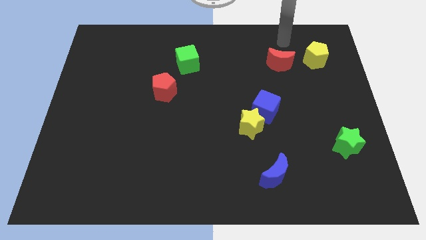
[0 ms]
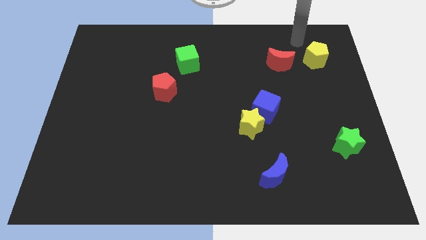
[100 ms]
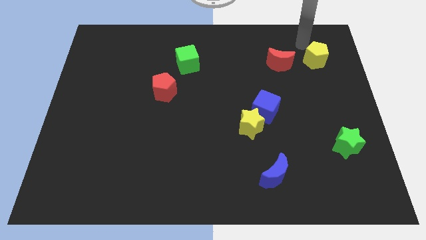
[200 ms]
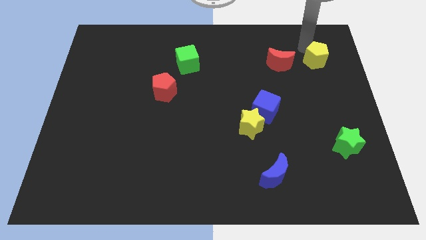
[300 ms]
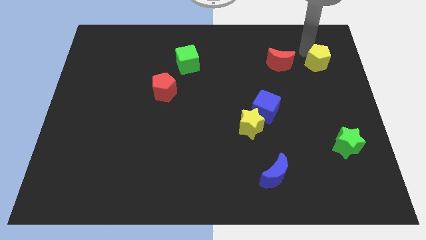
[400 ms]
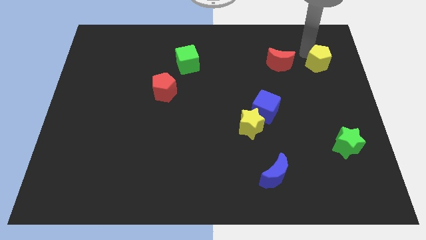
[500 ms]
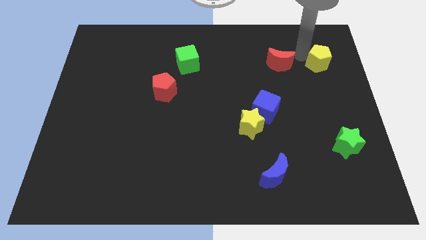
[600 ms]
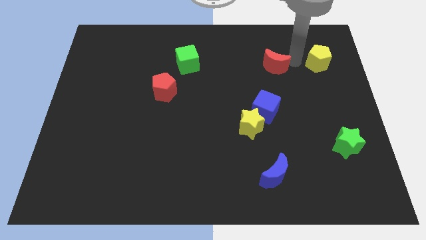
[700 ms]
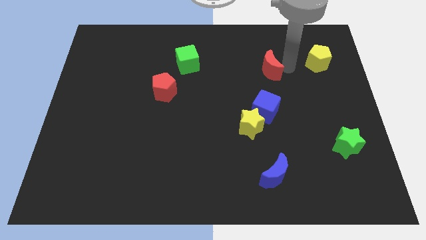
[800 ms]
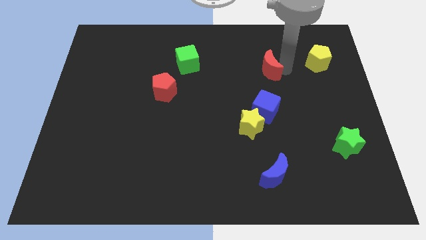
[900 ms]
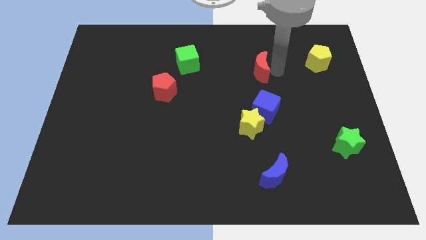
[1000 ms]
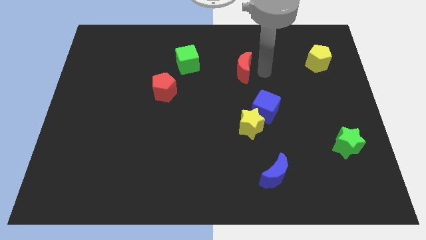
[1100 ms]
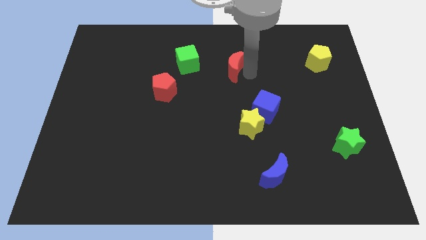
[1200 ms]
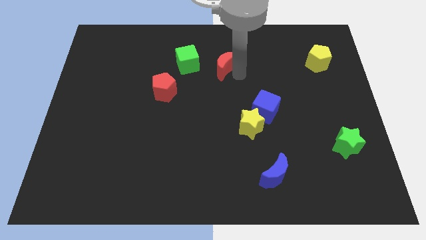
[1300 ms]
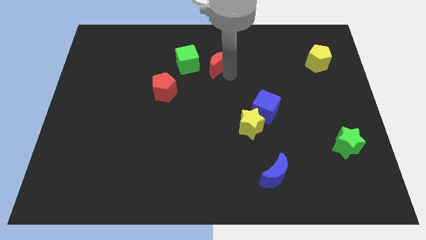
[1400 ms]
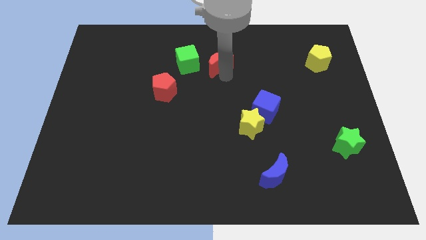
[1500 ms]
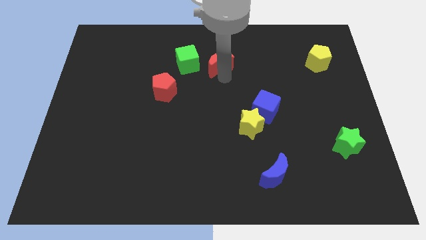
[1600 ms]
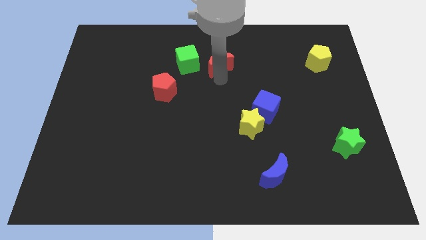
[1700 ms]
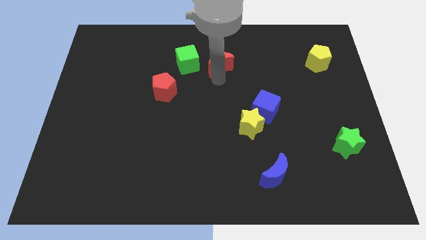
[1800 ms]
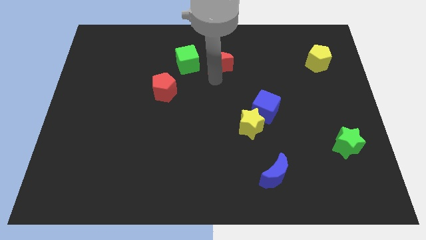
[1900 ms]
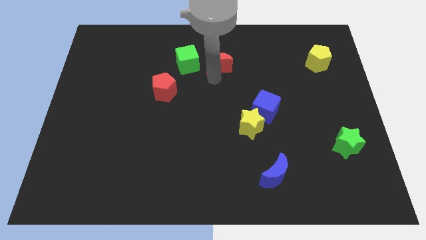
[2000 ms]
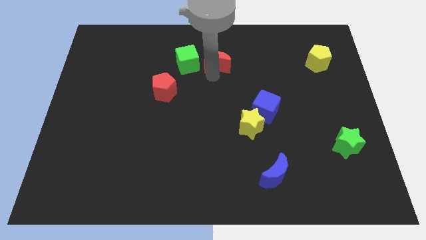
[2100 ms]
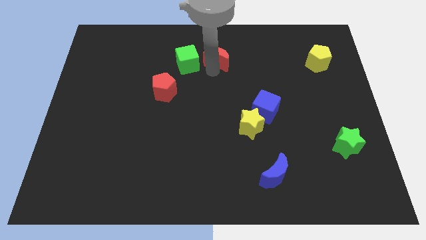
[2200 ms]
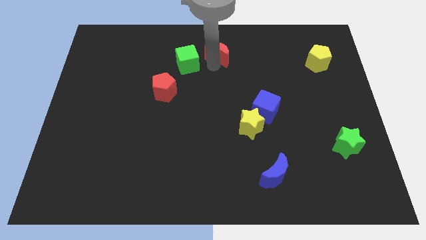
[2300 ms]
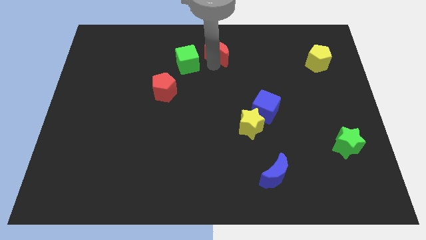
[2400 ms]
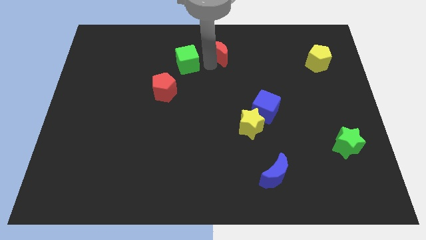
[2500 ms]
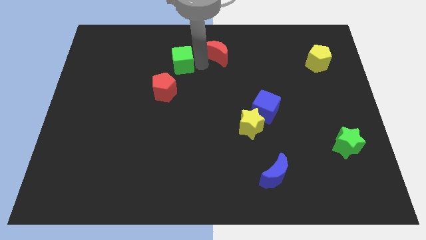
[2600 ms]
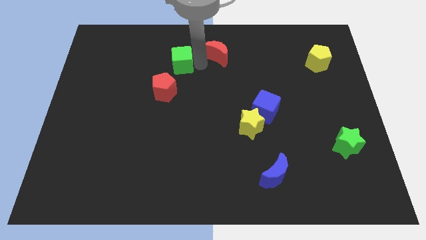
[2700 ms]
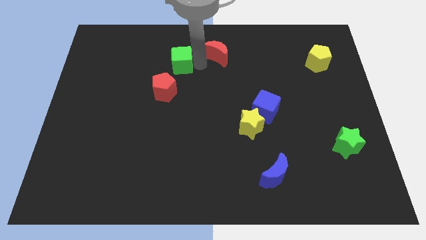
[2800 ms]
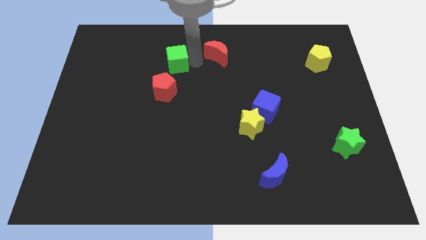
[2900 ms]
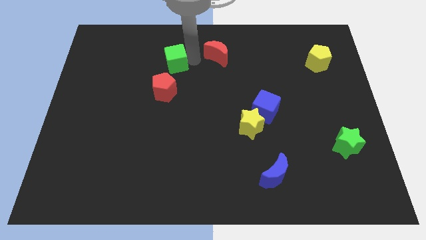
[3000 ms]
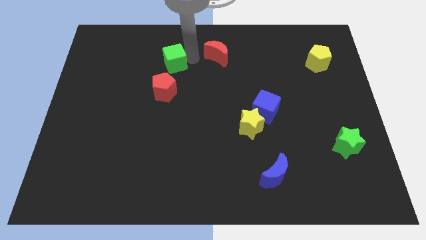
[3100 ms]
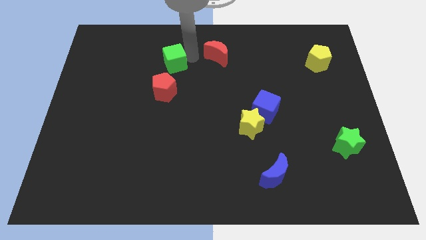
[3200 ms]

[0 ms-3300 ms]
push the red crescent to the top right of the green cube

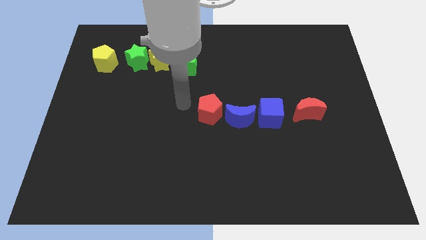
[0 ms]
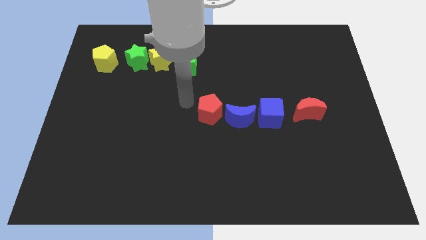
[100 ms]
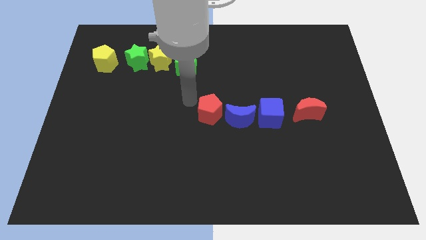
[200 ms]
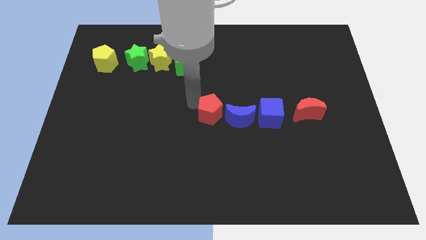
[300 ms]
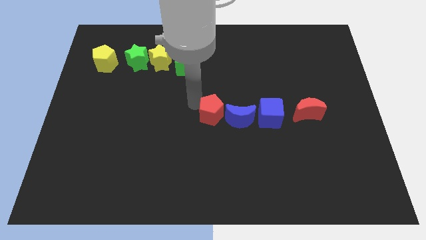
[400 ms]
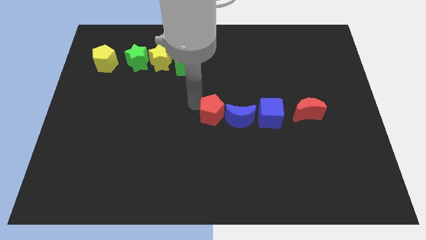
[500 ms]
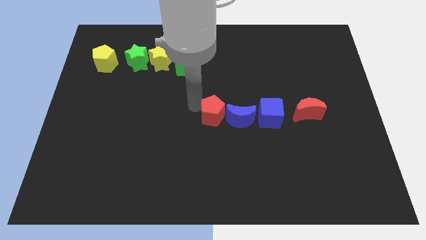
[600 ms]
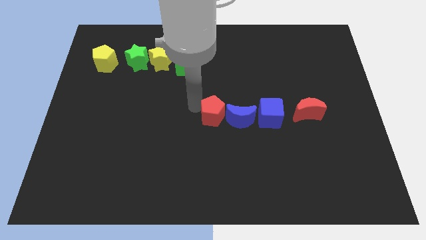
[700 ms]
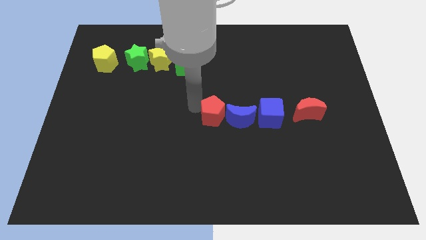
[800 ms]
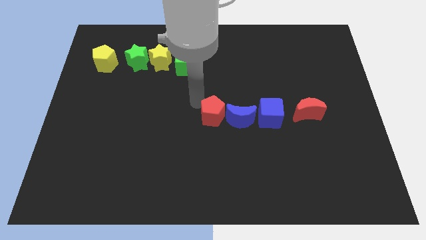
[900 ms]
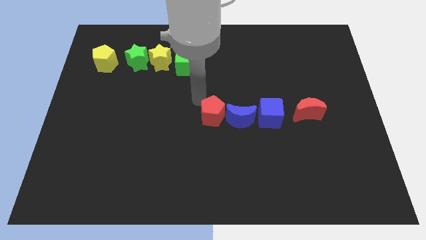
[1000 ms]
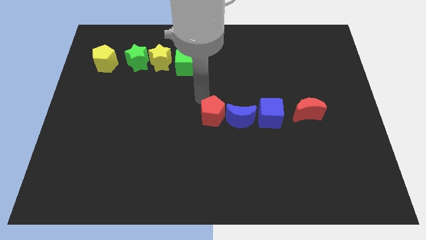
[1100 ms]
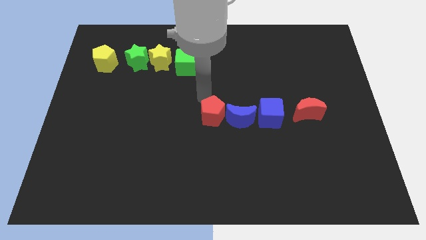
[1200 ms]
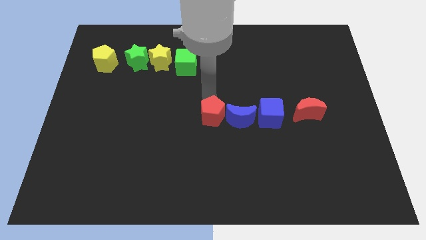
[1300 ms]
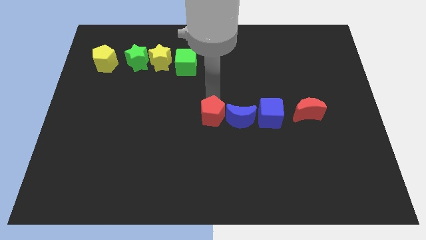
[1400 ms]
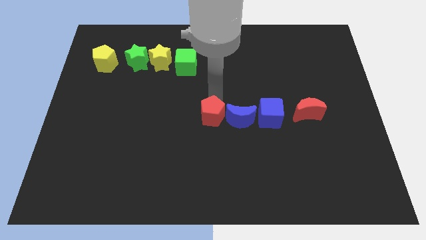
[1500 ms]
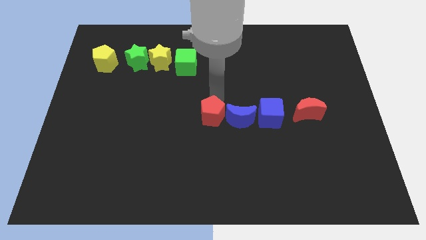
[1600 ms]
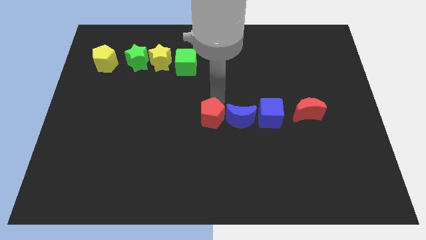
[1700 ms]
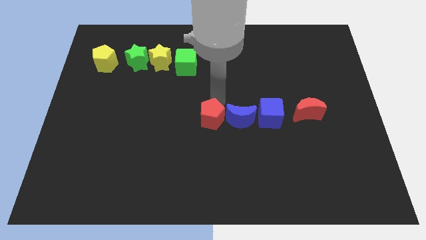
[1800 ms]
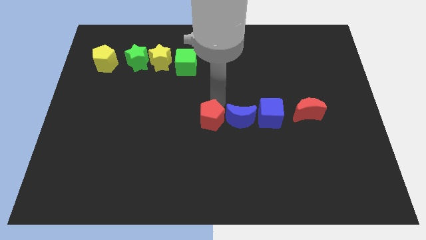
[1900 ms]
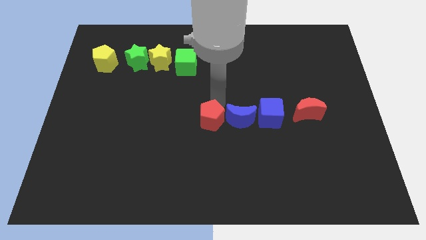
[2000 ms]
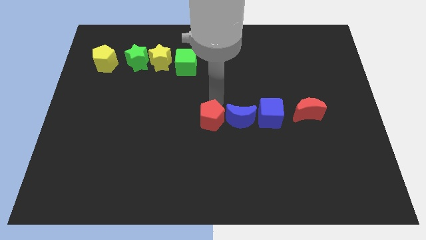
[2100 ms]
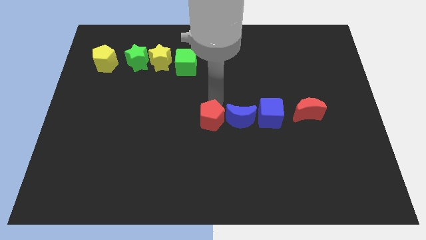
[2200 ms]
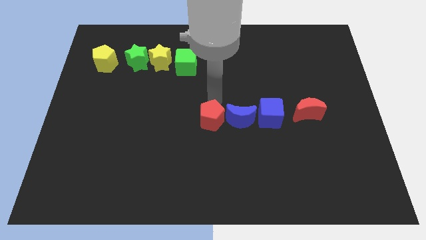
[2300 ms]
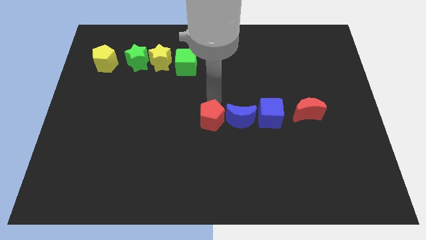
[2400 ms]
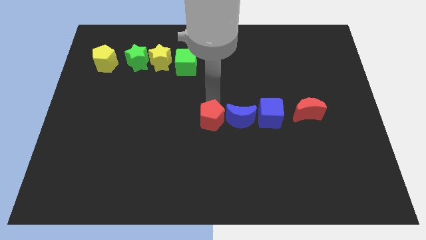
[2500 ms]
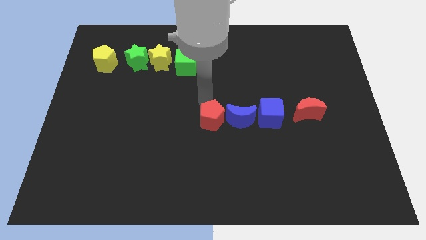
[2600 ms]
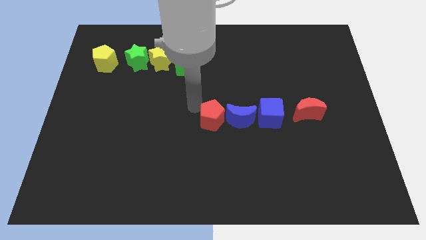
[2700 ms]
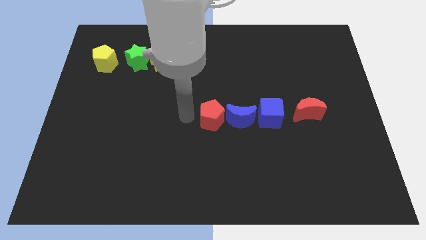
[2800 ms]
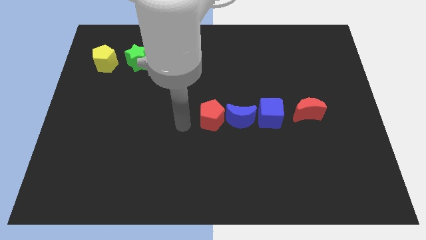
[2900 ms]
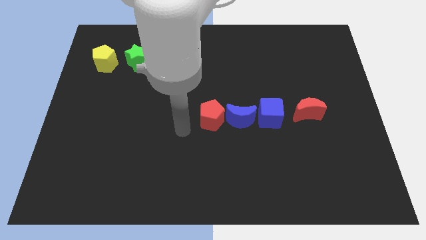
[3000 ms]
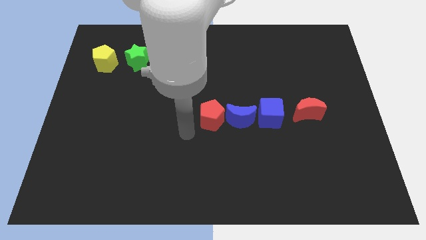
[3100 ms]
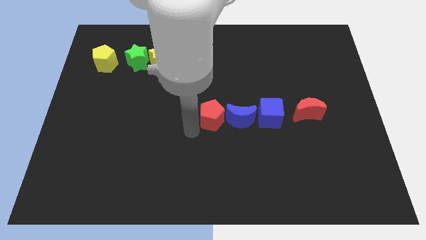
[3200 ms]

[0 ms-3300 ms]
move the red pentagon downwards slightly

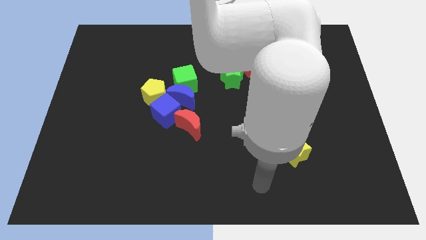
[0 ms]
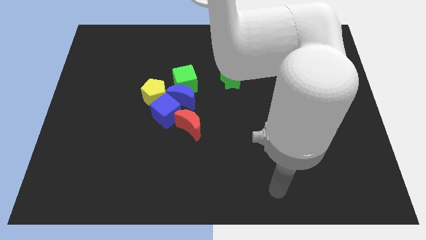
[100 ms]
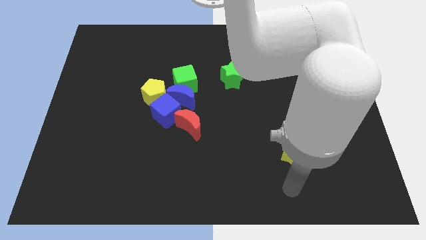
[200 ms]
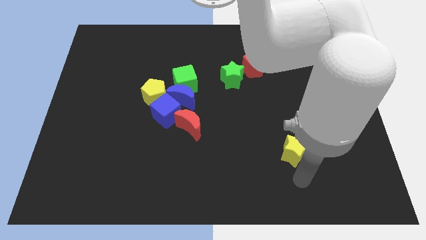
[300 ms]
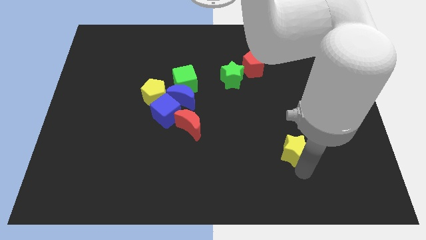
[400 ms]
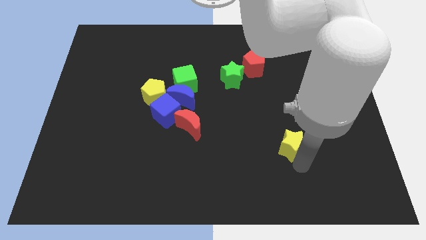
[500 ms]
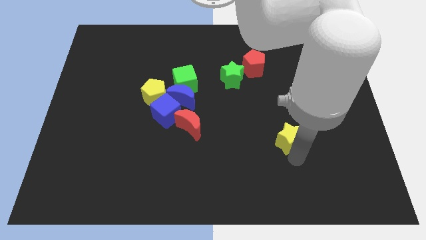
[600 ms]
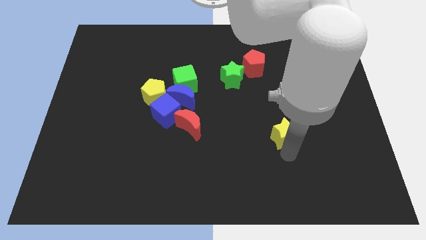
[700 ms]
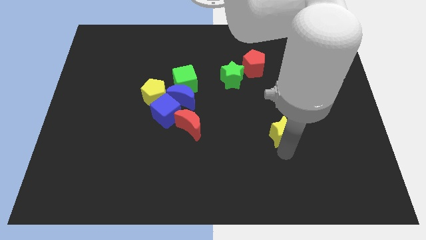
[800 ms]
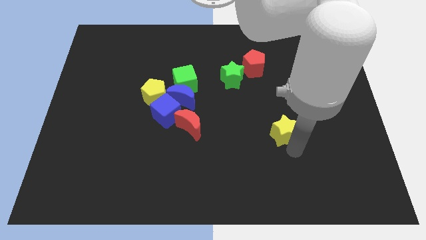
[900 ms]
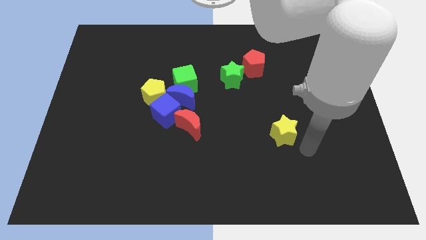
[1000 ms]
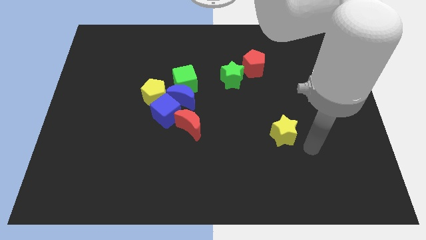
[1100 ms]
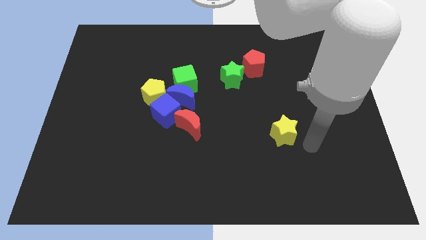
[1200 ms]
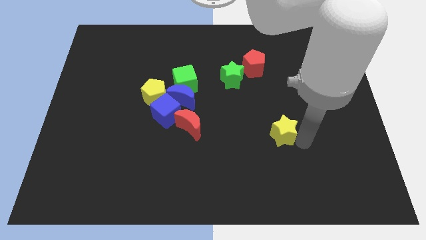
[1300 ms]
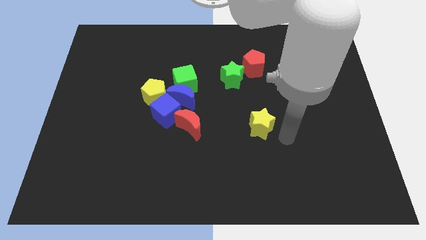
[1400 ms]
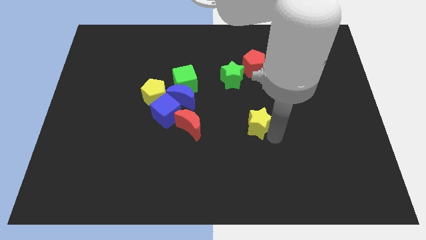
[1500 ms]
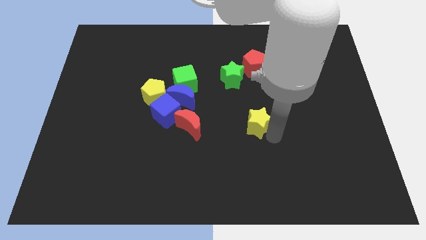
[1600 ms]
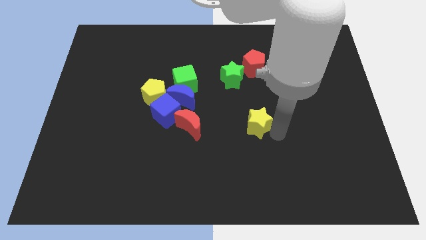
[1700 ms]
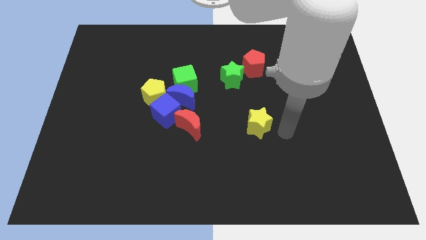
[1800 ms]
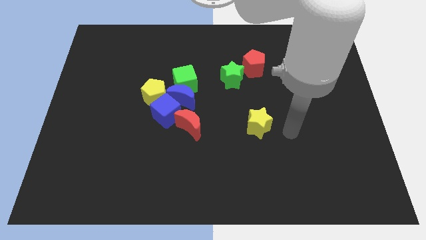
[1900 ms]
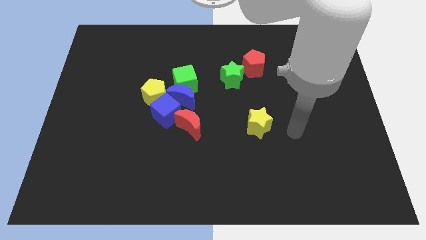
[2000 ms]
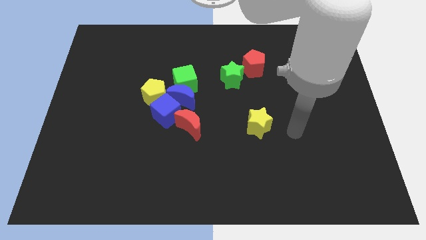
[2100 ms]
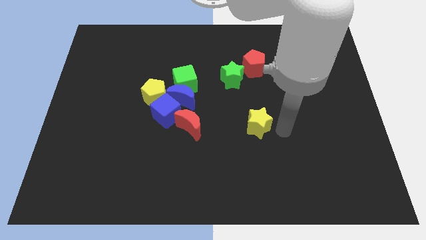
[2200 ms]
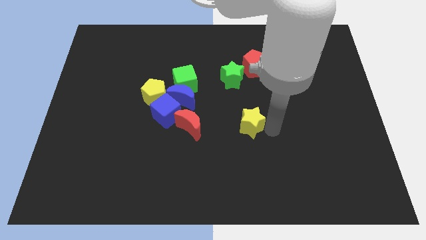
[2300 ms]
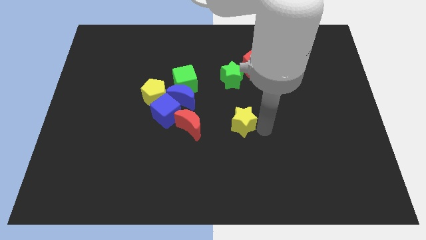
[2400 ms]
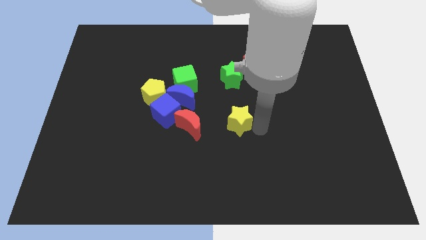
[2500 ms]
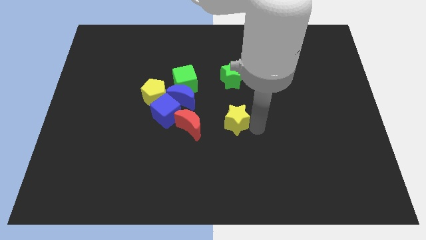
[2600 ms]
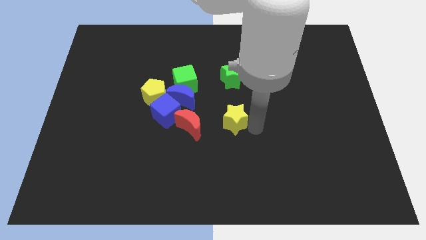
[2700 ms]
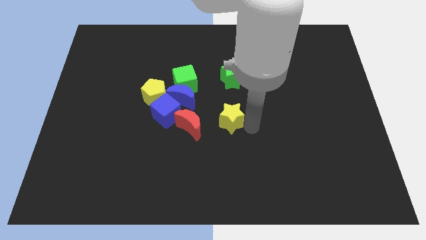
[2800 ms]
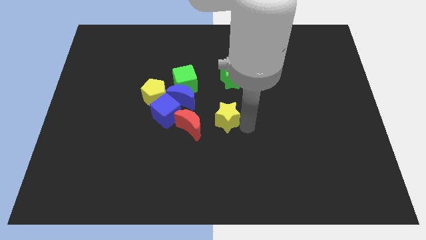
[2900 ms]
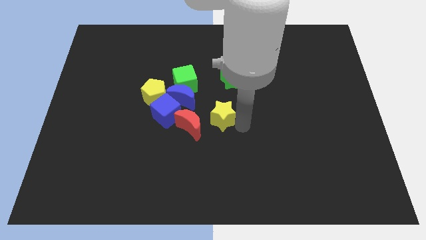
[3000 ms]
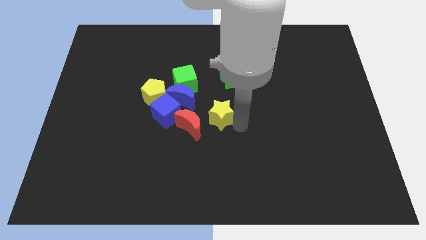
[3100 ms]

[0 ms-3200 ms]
drag the yellow star to the center of the board
